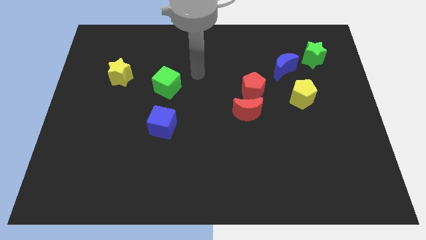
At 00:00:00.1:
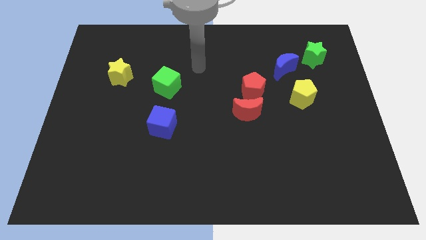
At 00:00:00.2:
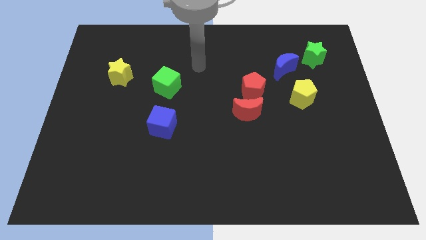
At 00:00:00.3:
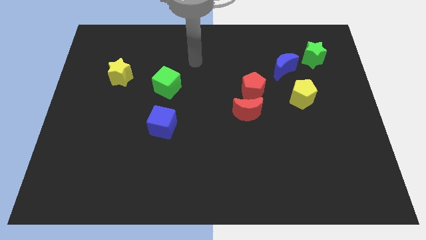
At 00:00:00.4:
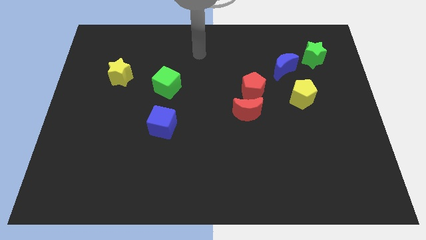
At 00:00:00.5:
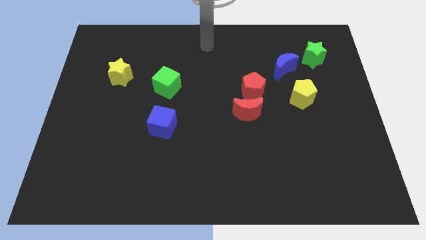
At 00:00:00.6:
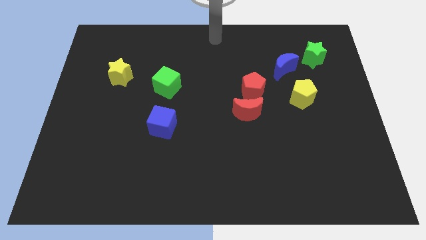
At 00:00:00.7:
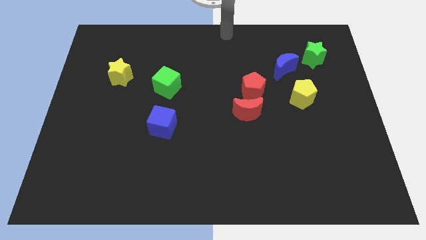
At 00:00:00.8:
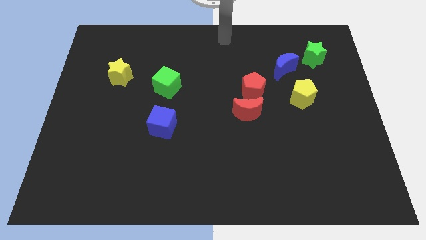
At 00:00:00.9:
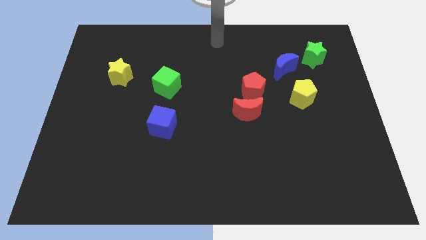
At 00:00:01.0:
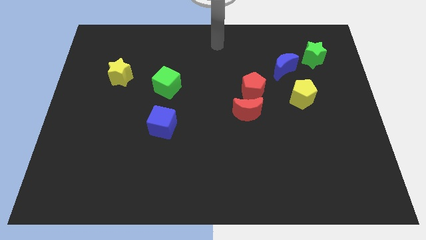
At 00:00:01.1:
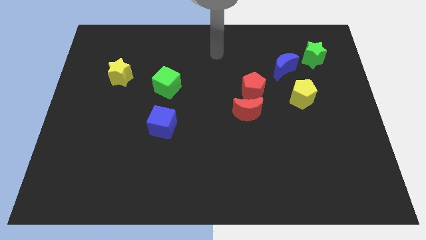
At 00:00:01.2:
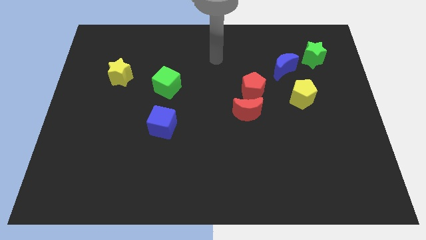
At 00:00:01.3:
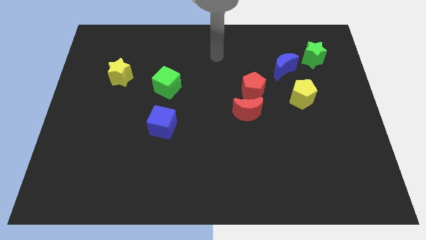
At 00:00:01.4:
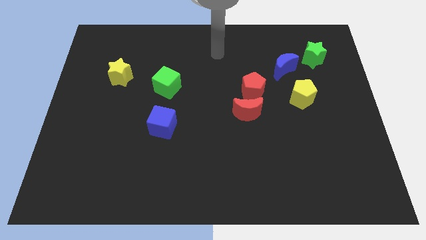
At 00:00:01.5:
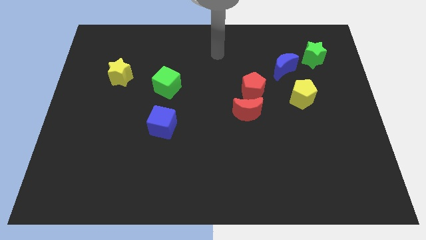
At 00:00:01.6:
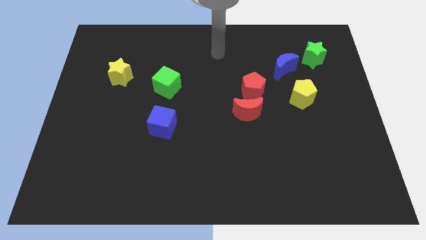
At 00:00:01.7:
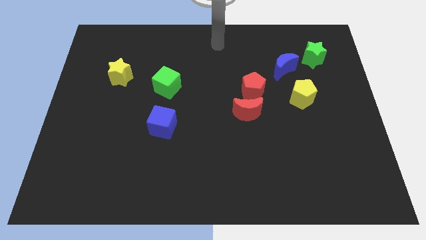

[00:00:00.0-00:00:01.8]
move your arm towards top center of the board

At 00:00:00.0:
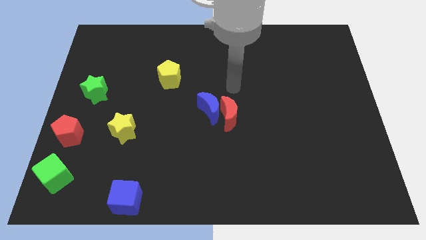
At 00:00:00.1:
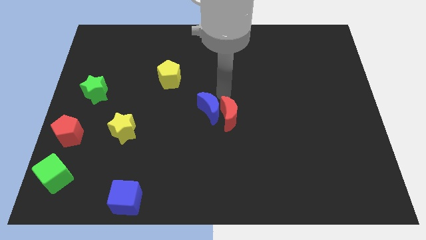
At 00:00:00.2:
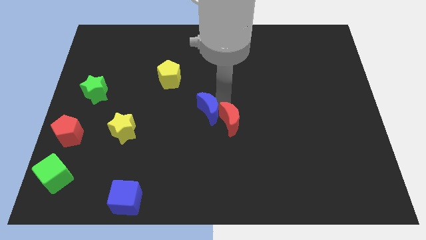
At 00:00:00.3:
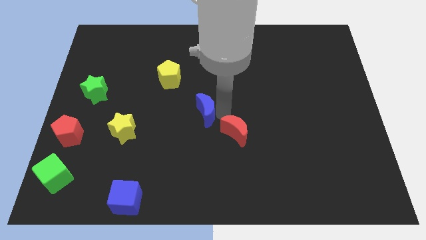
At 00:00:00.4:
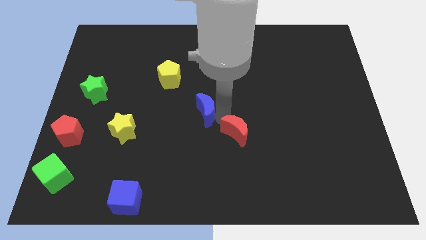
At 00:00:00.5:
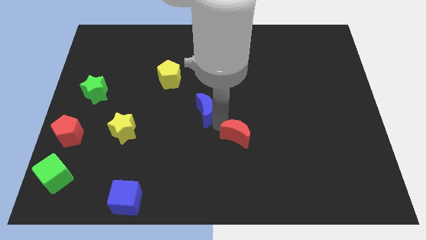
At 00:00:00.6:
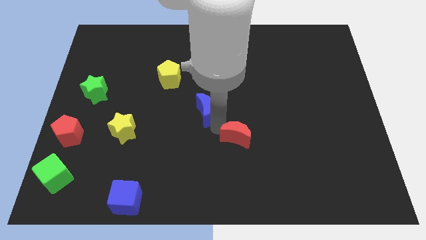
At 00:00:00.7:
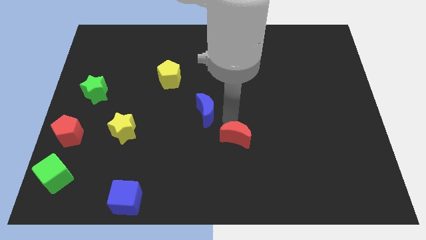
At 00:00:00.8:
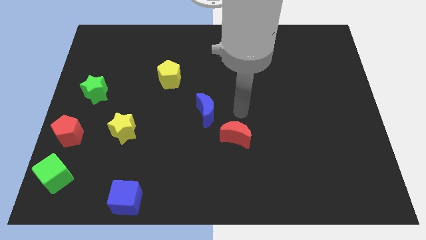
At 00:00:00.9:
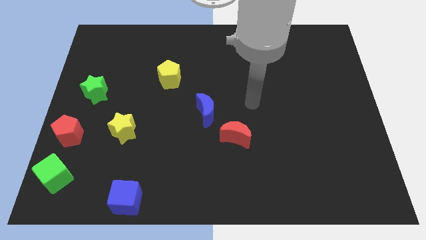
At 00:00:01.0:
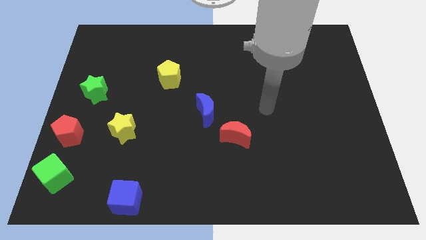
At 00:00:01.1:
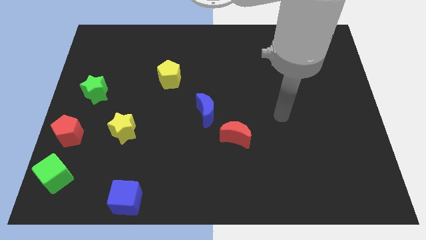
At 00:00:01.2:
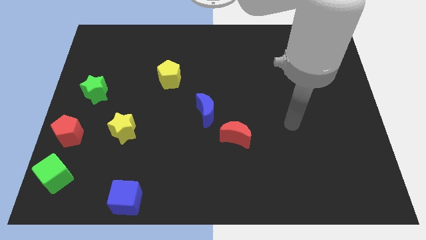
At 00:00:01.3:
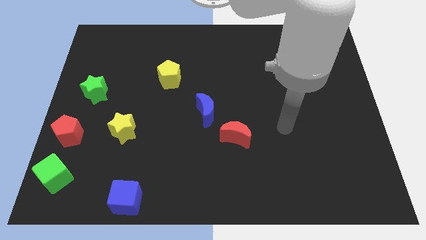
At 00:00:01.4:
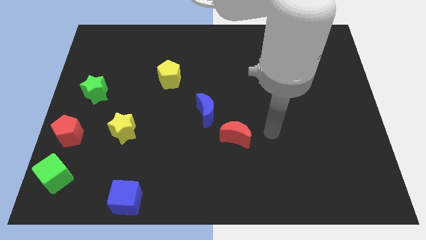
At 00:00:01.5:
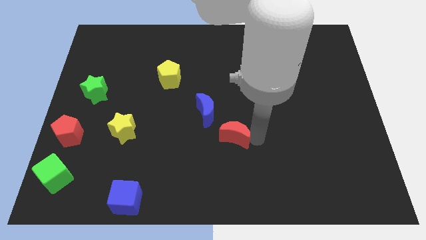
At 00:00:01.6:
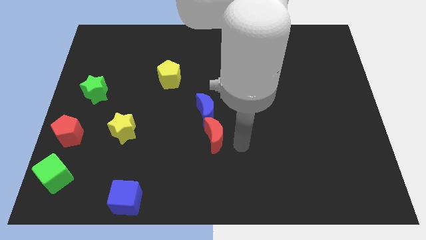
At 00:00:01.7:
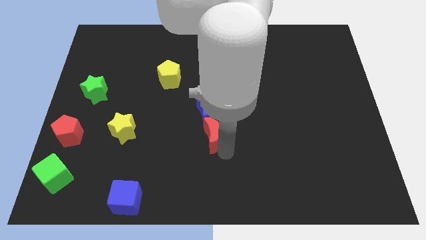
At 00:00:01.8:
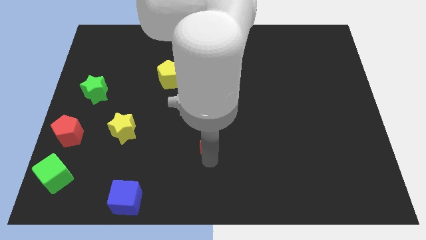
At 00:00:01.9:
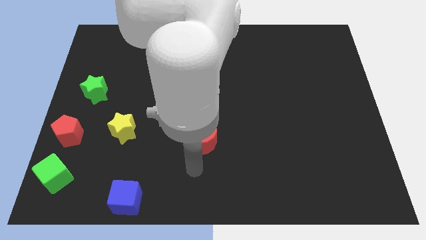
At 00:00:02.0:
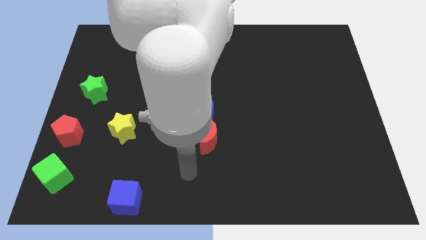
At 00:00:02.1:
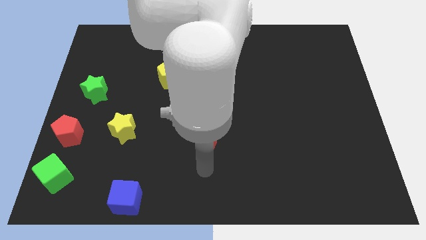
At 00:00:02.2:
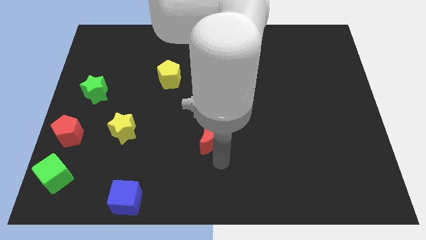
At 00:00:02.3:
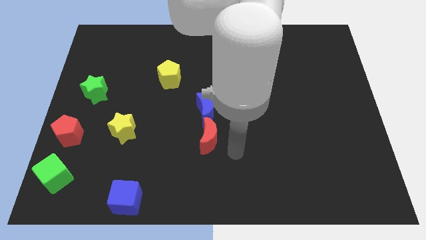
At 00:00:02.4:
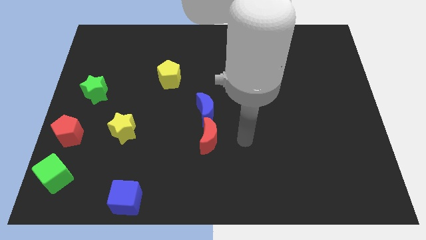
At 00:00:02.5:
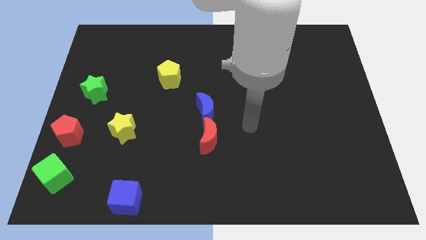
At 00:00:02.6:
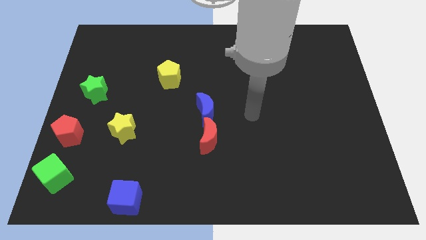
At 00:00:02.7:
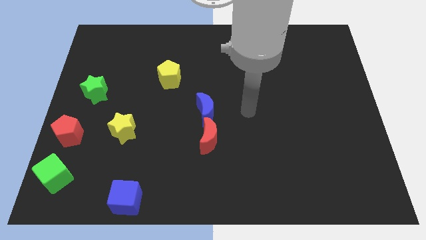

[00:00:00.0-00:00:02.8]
move the red crescent to the bottom of the blue crescent

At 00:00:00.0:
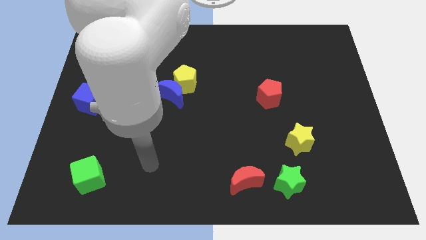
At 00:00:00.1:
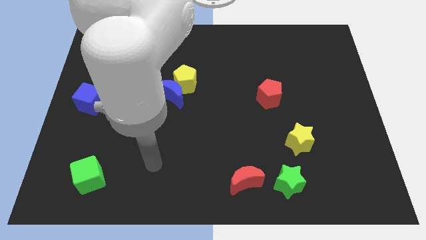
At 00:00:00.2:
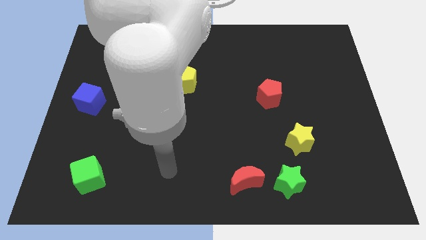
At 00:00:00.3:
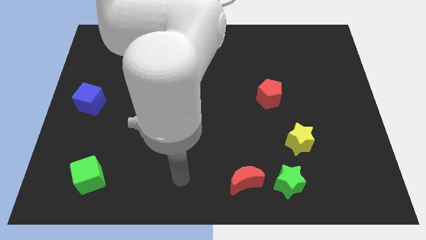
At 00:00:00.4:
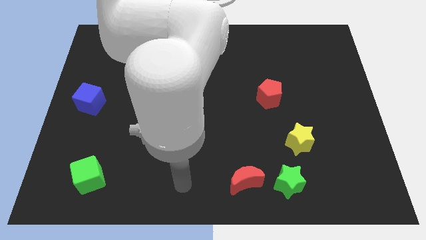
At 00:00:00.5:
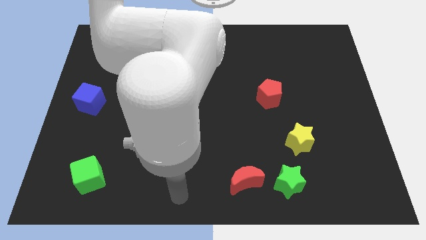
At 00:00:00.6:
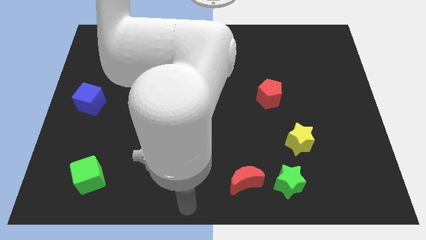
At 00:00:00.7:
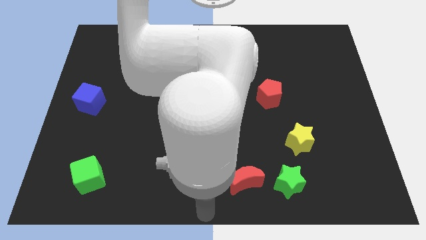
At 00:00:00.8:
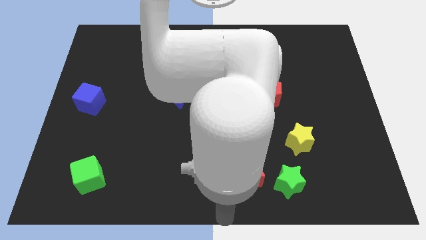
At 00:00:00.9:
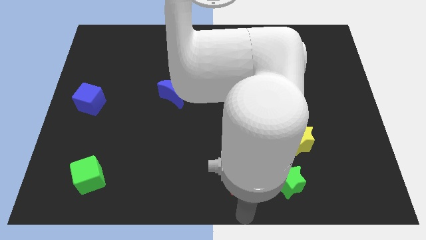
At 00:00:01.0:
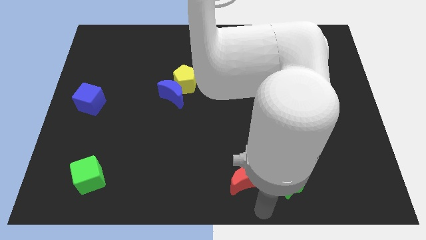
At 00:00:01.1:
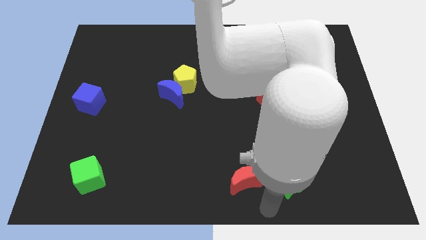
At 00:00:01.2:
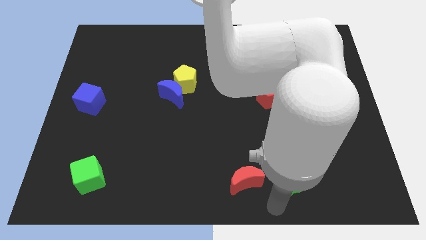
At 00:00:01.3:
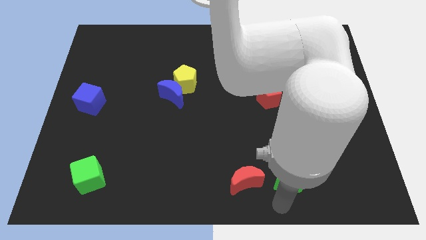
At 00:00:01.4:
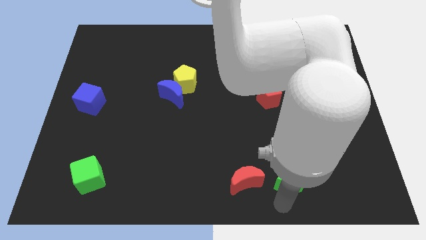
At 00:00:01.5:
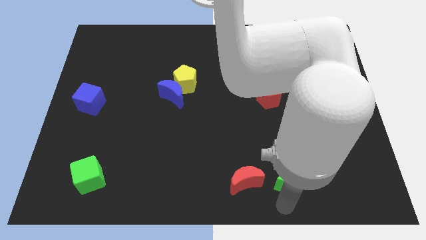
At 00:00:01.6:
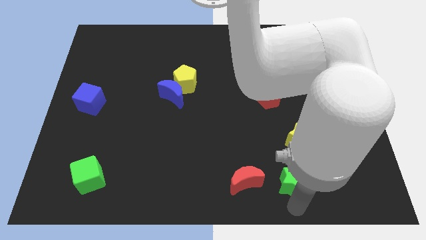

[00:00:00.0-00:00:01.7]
touch the green star

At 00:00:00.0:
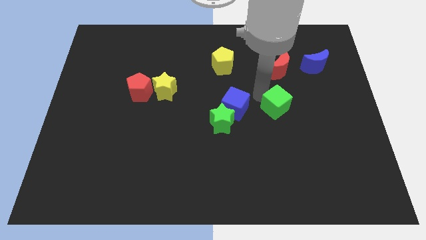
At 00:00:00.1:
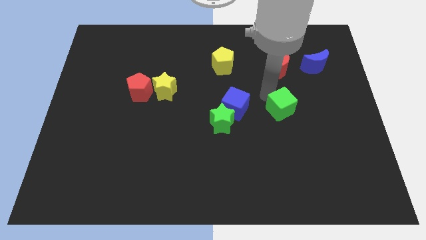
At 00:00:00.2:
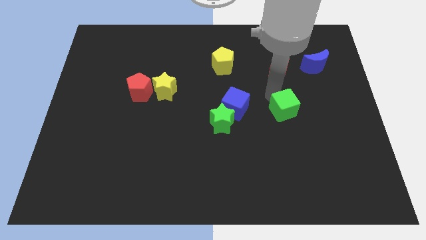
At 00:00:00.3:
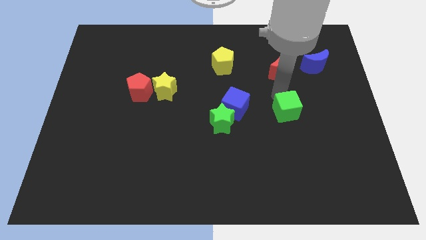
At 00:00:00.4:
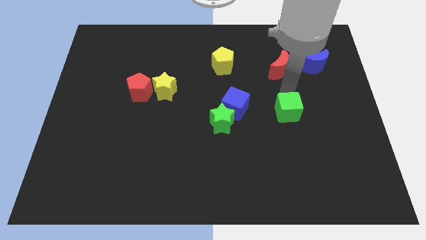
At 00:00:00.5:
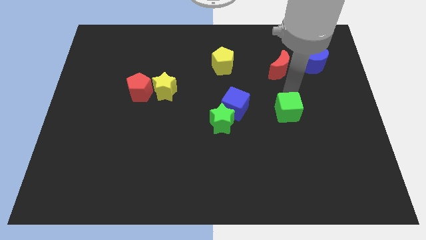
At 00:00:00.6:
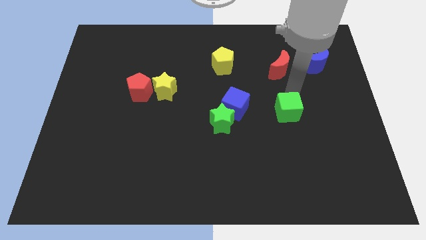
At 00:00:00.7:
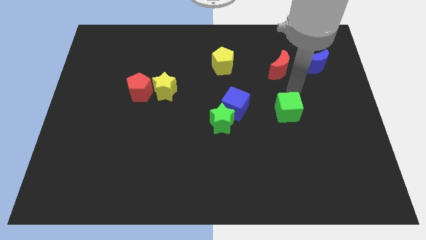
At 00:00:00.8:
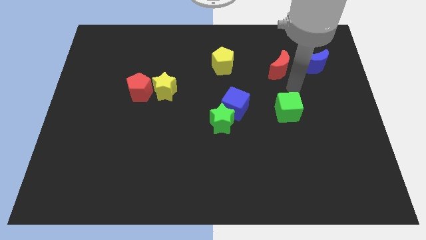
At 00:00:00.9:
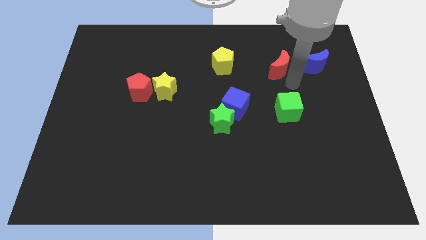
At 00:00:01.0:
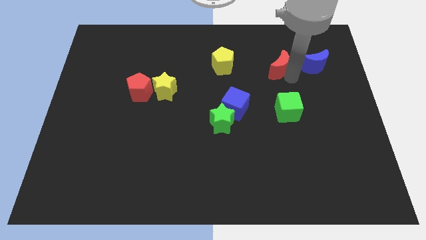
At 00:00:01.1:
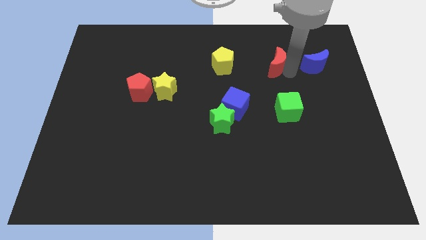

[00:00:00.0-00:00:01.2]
move the green cube to the bottom side of the red moon

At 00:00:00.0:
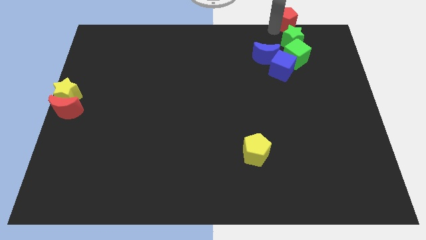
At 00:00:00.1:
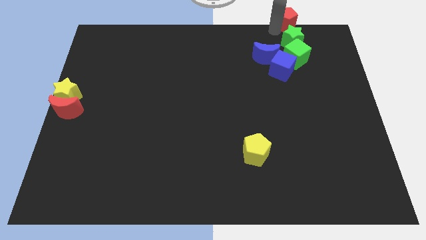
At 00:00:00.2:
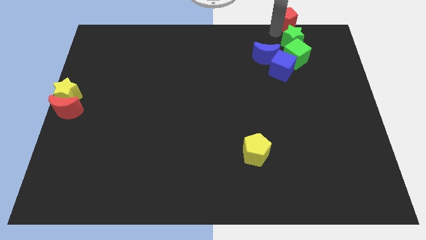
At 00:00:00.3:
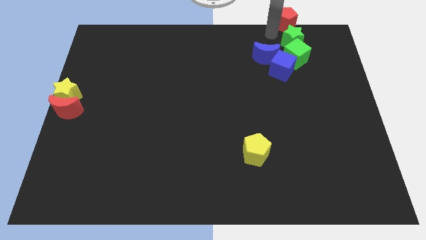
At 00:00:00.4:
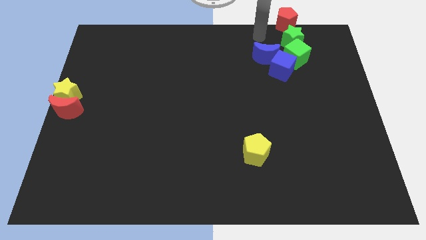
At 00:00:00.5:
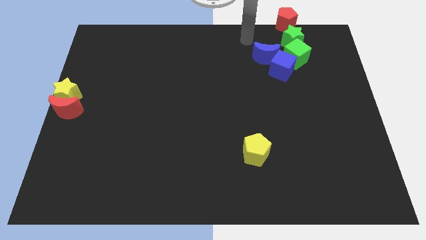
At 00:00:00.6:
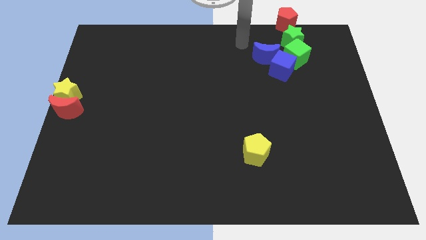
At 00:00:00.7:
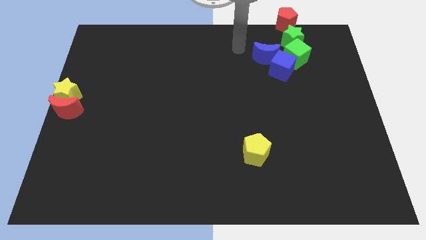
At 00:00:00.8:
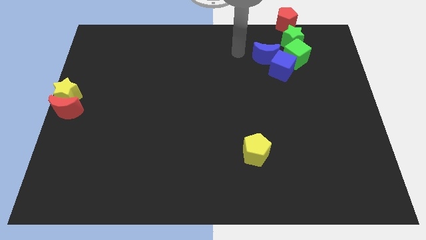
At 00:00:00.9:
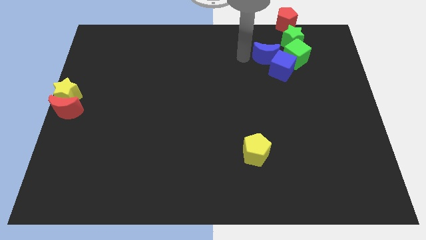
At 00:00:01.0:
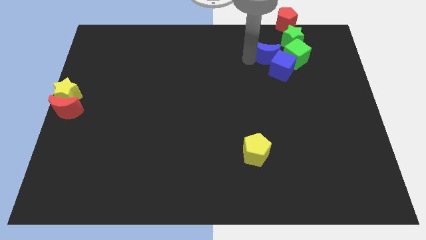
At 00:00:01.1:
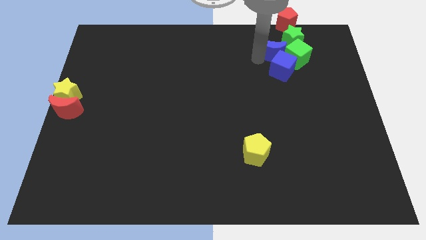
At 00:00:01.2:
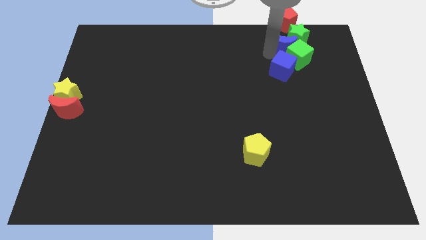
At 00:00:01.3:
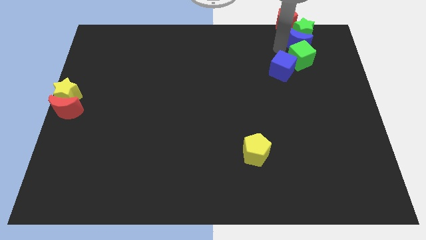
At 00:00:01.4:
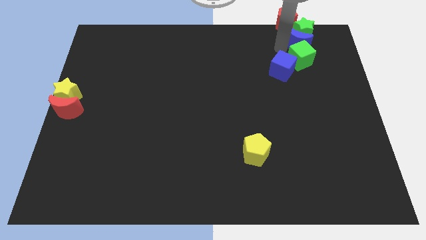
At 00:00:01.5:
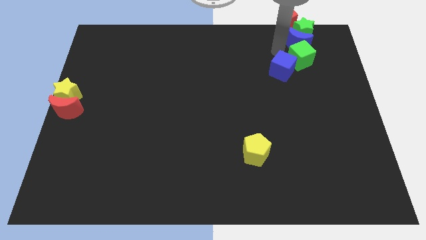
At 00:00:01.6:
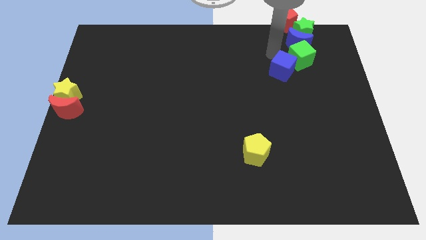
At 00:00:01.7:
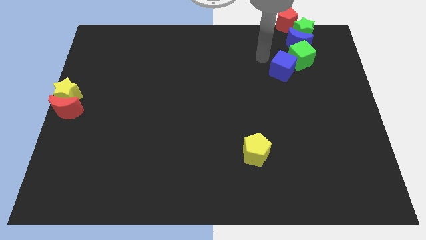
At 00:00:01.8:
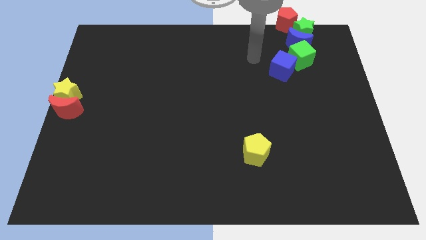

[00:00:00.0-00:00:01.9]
slide the blue moon into the green star
